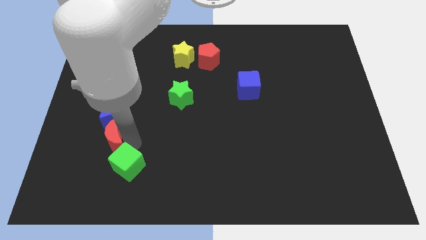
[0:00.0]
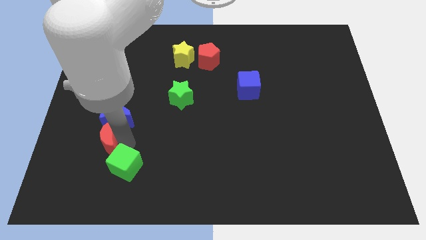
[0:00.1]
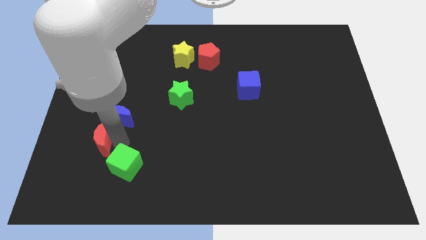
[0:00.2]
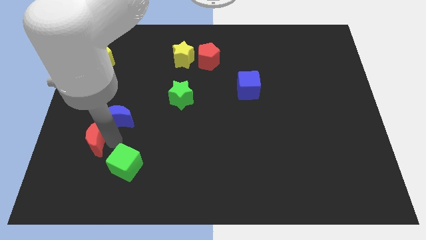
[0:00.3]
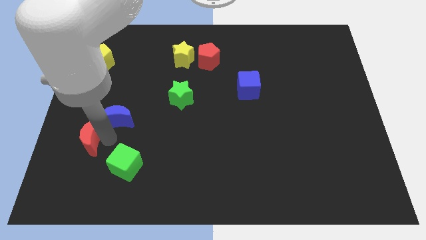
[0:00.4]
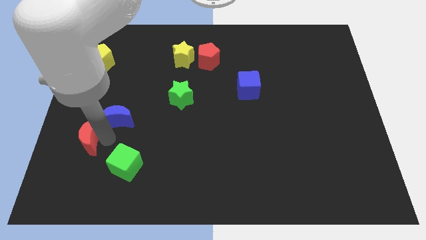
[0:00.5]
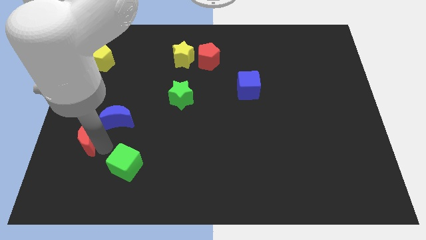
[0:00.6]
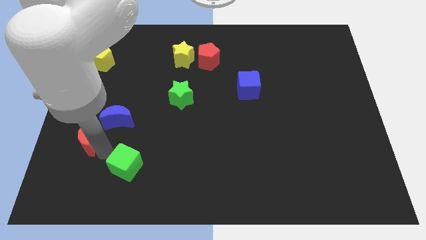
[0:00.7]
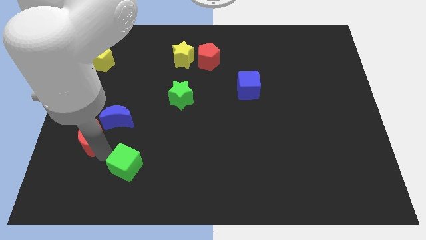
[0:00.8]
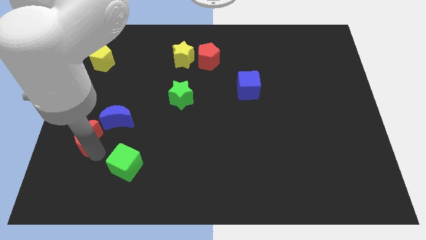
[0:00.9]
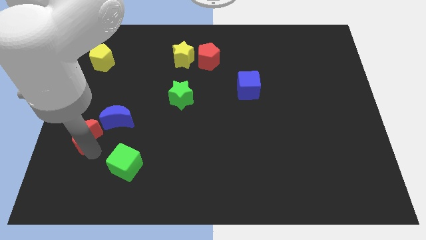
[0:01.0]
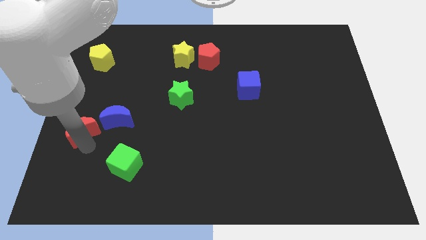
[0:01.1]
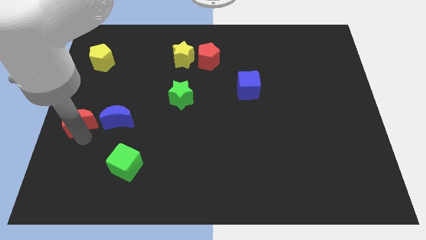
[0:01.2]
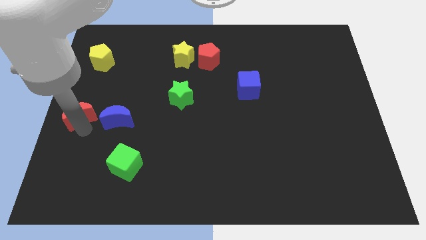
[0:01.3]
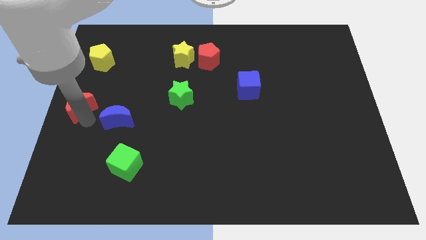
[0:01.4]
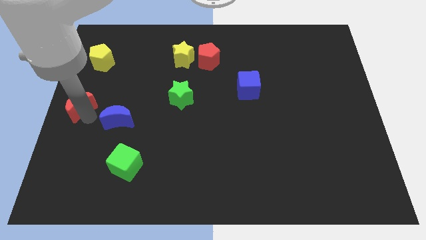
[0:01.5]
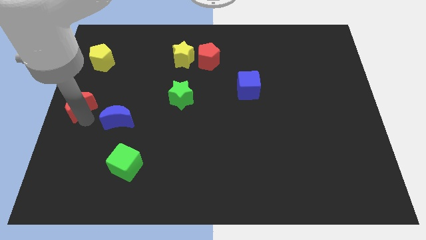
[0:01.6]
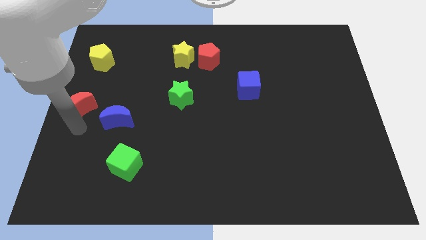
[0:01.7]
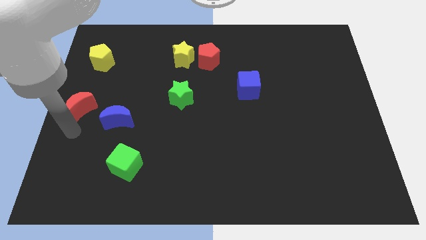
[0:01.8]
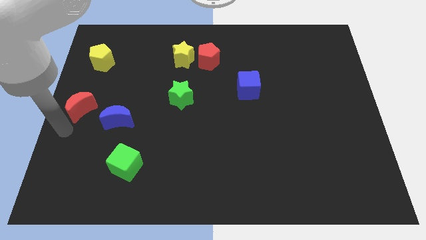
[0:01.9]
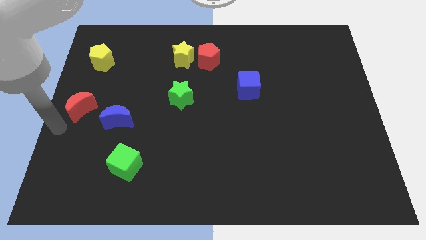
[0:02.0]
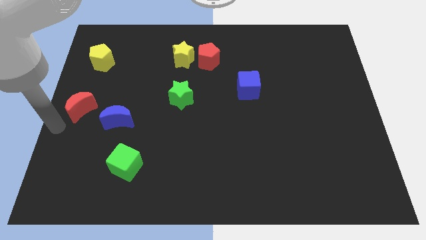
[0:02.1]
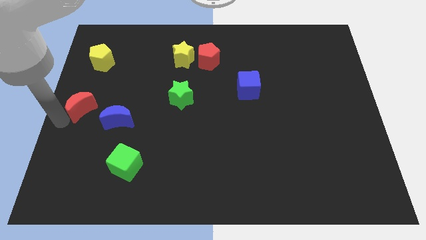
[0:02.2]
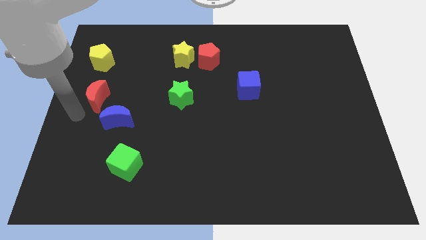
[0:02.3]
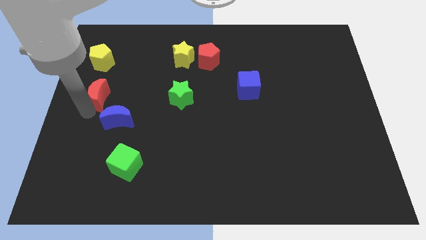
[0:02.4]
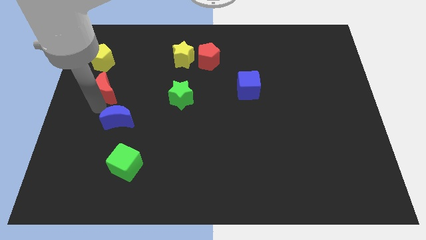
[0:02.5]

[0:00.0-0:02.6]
place the red crescent in between the yellow pentagon and blue moon

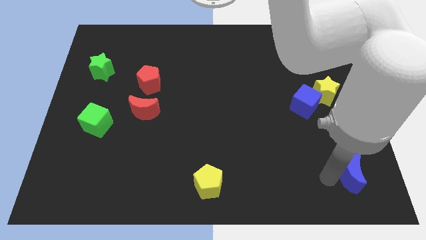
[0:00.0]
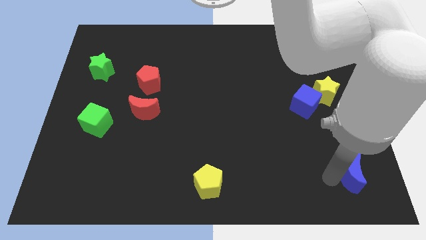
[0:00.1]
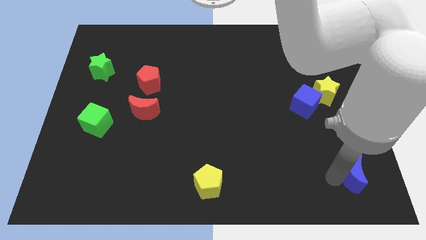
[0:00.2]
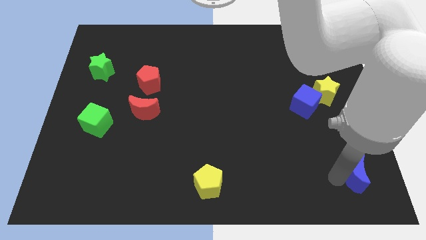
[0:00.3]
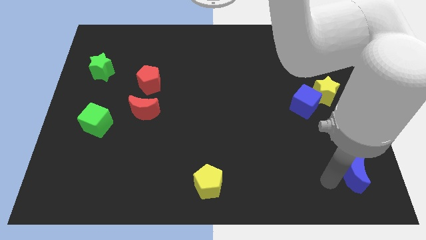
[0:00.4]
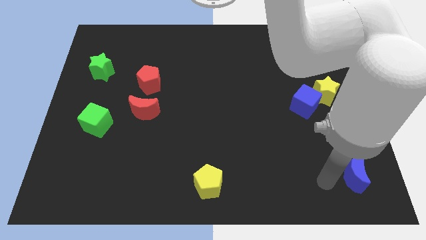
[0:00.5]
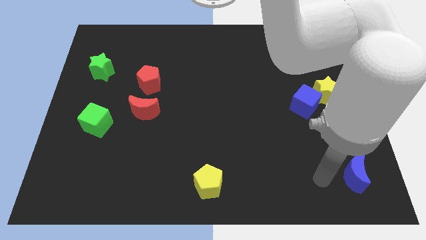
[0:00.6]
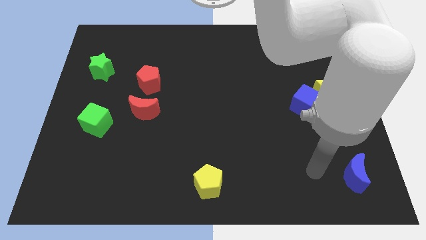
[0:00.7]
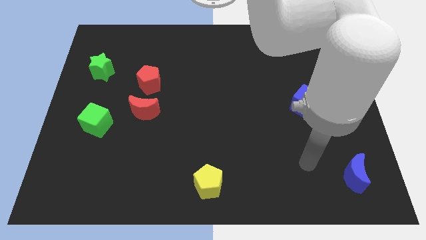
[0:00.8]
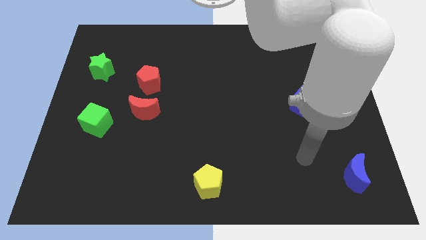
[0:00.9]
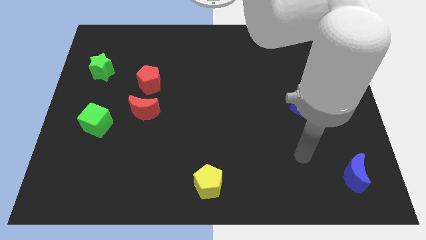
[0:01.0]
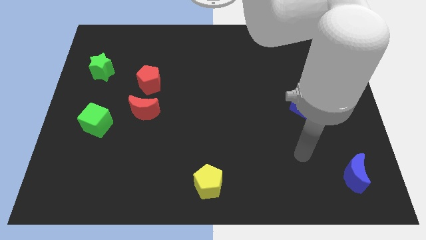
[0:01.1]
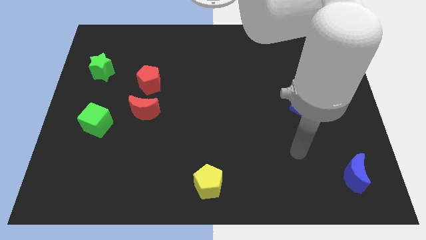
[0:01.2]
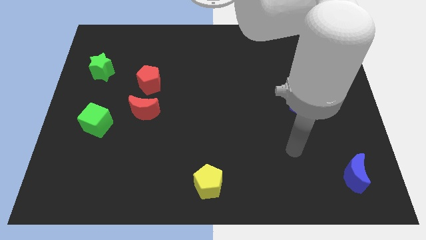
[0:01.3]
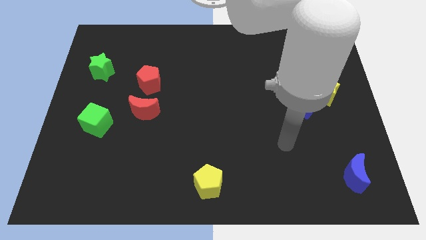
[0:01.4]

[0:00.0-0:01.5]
place the blue moon at the bottom right of the board

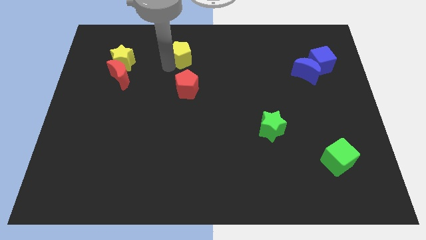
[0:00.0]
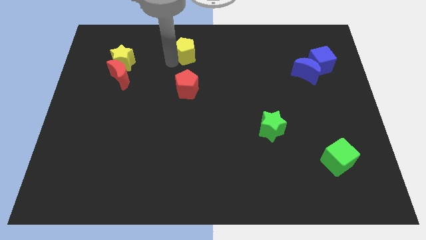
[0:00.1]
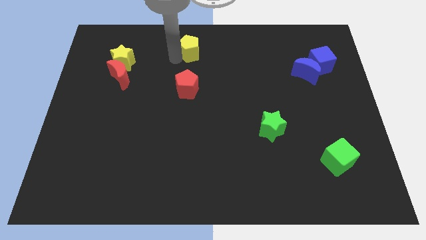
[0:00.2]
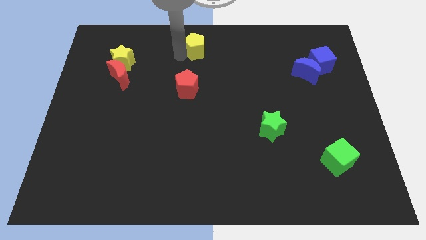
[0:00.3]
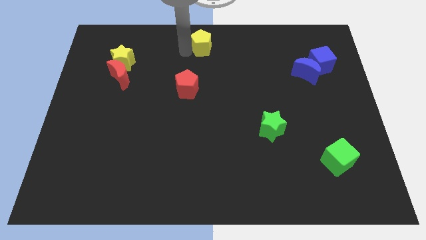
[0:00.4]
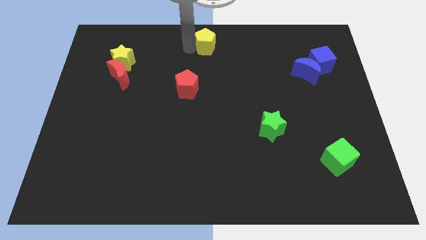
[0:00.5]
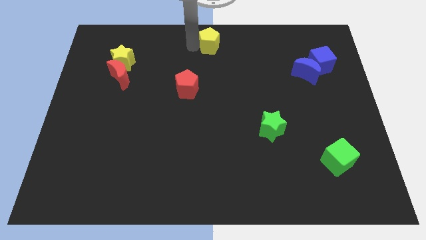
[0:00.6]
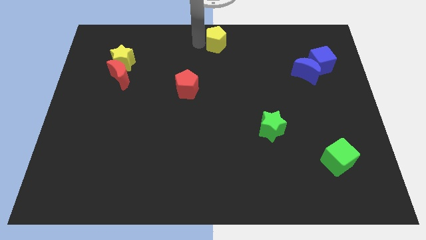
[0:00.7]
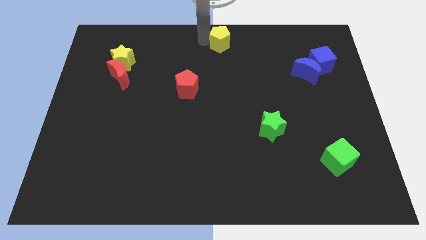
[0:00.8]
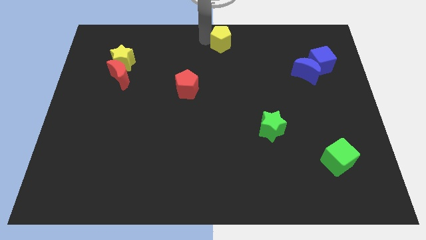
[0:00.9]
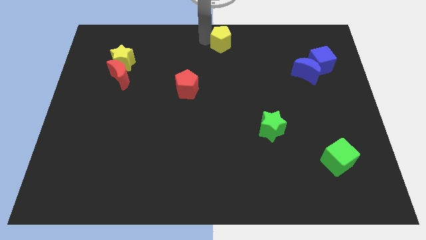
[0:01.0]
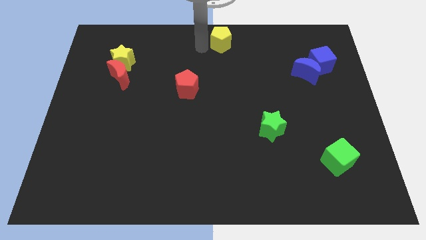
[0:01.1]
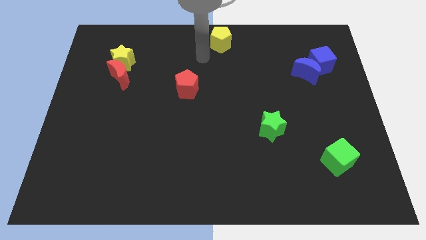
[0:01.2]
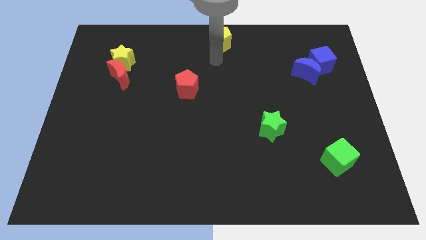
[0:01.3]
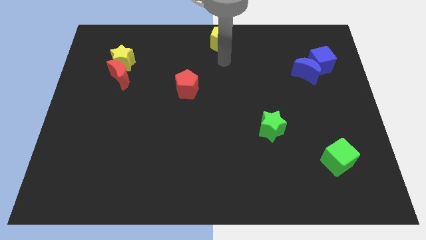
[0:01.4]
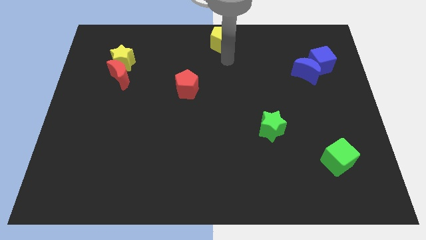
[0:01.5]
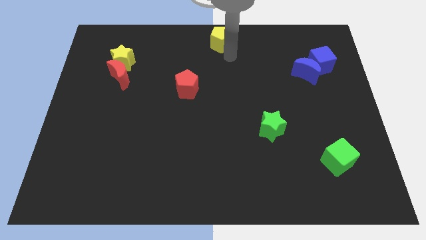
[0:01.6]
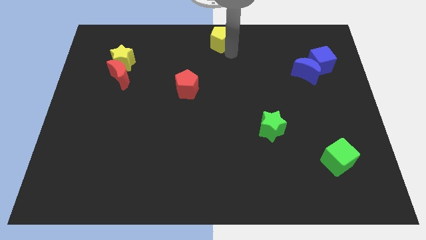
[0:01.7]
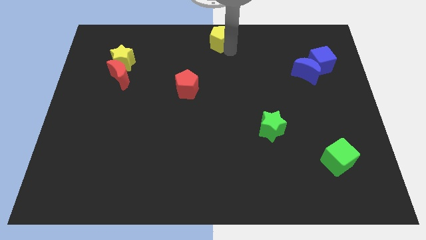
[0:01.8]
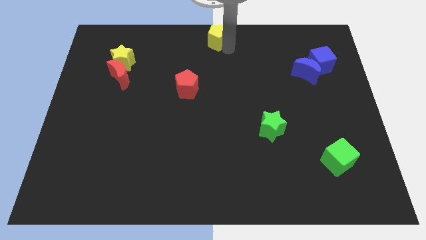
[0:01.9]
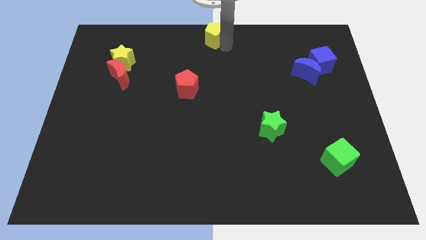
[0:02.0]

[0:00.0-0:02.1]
place yellow pentagon at the top center

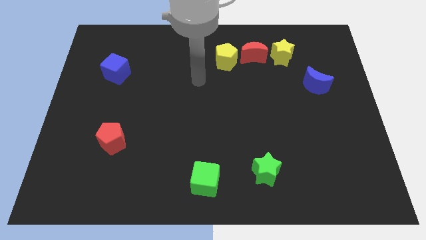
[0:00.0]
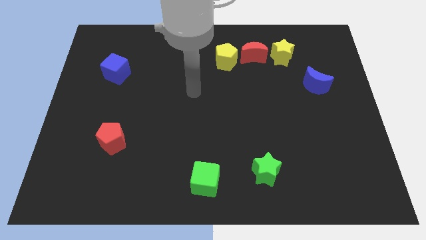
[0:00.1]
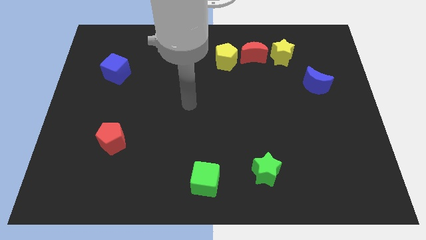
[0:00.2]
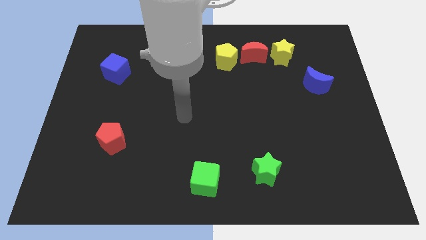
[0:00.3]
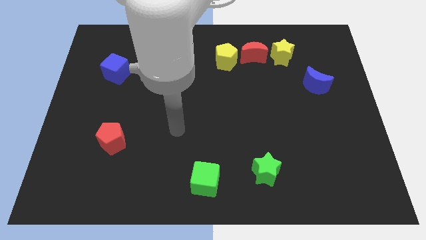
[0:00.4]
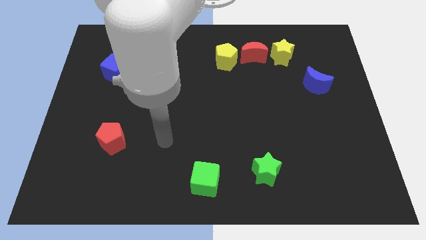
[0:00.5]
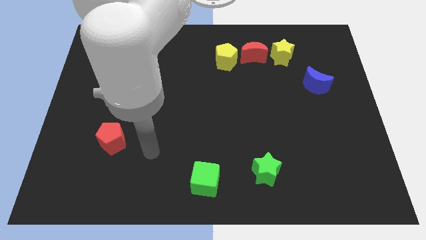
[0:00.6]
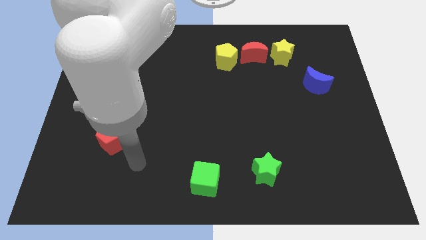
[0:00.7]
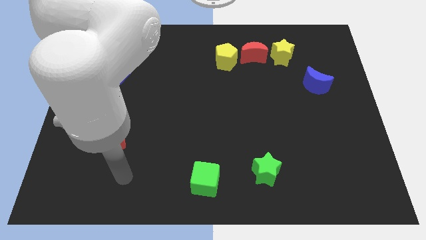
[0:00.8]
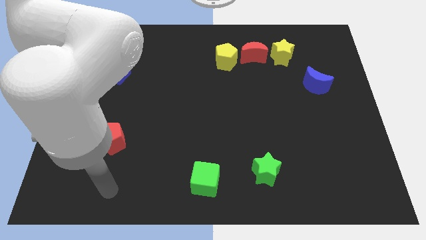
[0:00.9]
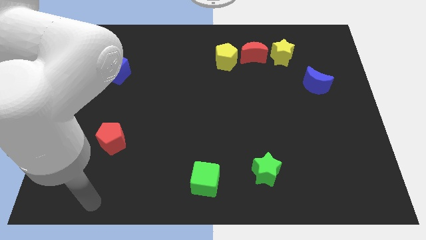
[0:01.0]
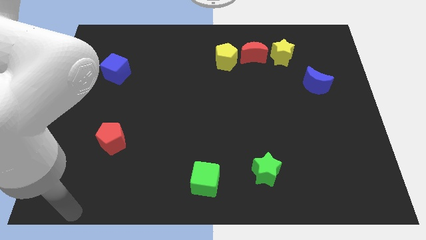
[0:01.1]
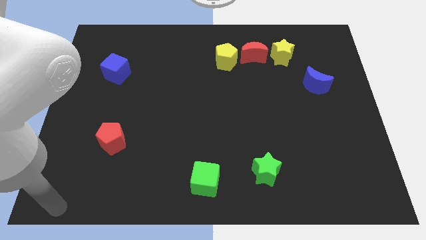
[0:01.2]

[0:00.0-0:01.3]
move yourself to the bottom left side of the board

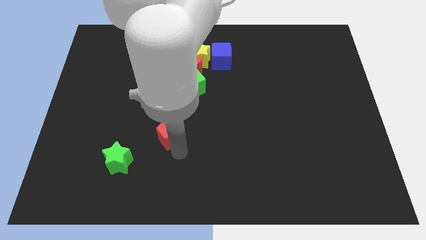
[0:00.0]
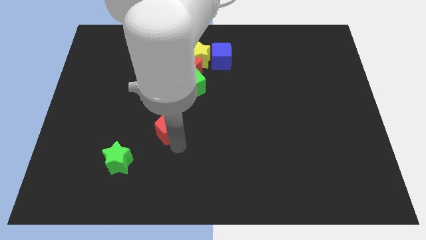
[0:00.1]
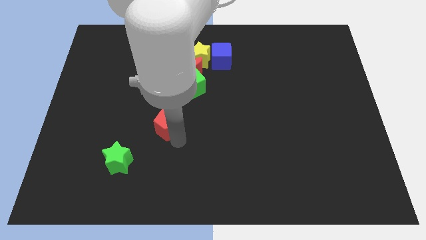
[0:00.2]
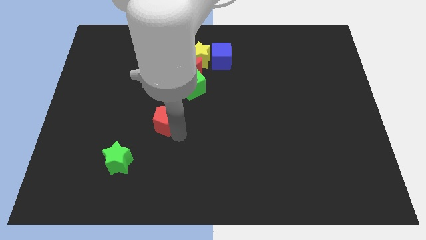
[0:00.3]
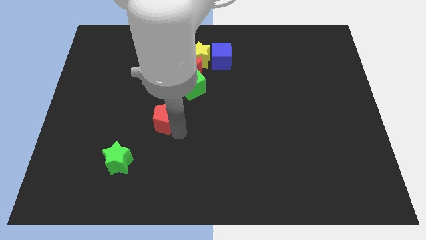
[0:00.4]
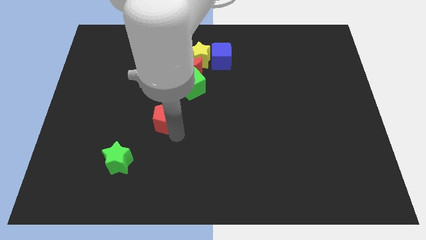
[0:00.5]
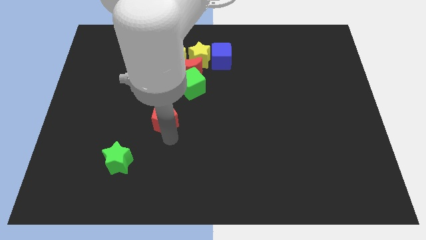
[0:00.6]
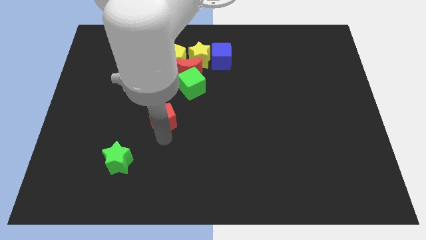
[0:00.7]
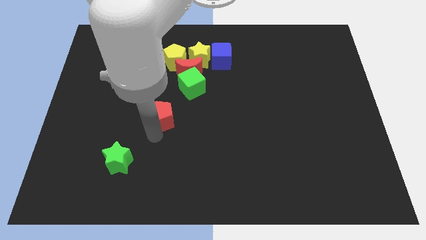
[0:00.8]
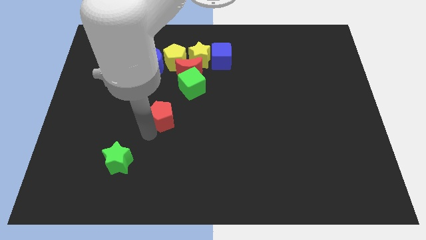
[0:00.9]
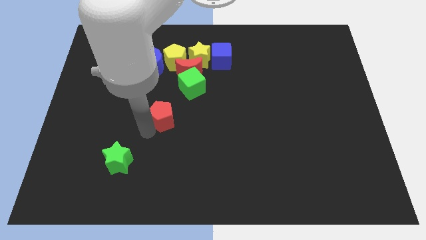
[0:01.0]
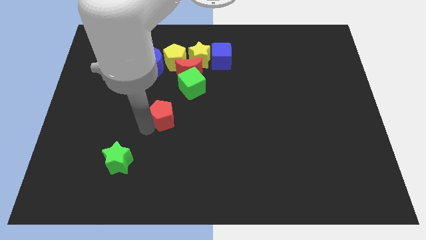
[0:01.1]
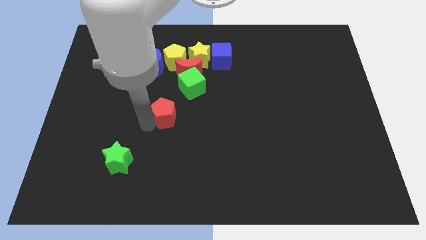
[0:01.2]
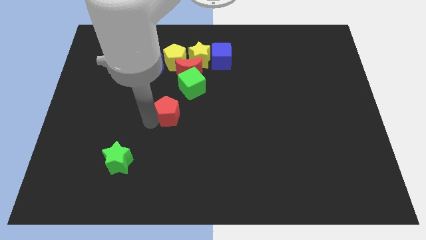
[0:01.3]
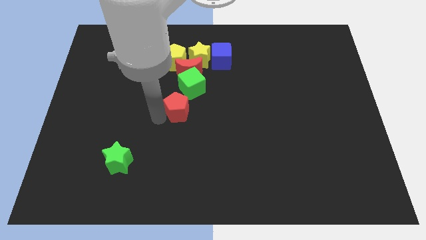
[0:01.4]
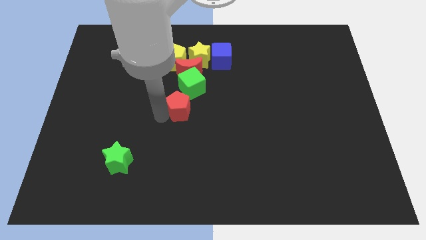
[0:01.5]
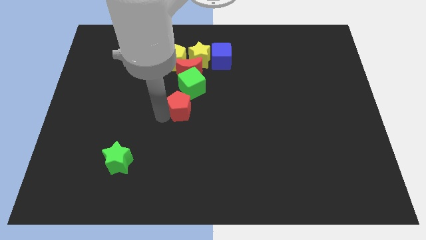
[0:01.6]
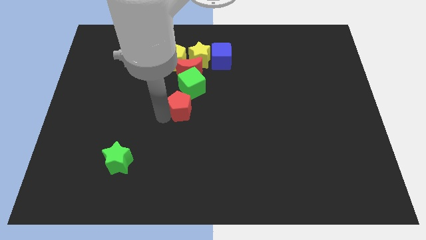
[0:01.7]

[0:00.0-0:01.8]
place the red pentagon below the green cube
